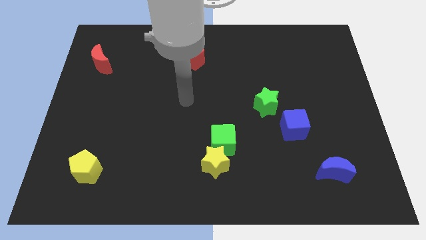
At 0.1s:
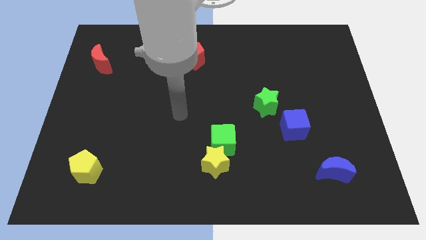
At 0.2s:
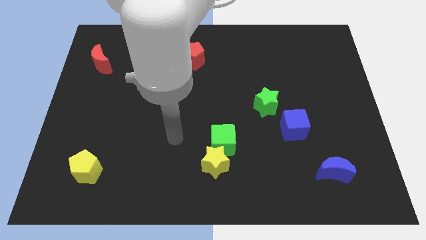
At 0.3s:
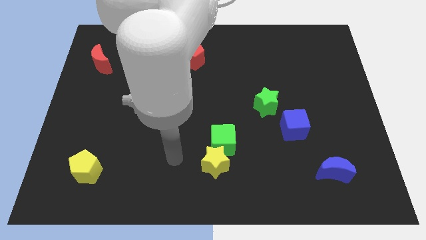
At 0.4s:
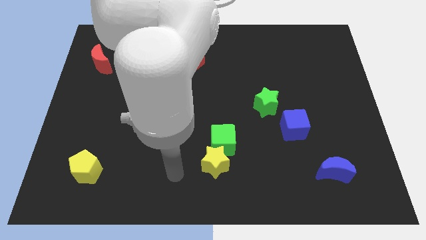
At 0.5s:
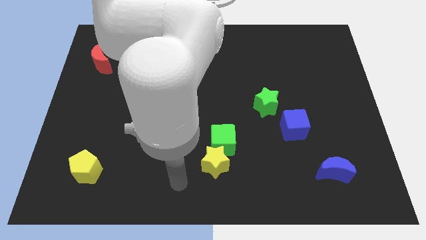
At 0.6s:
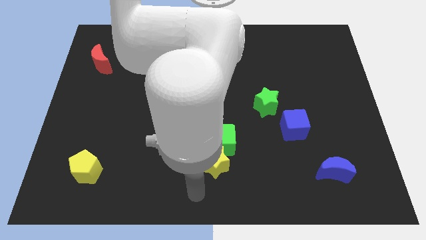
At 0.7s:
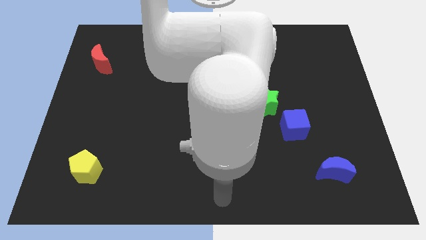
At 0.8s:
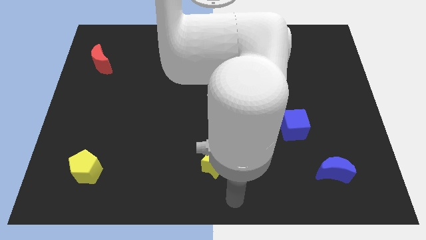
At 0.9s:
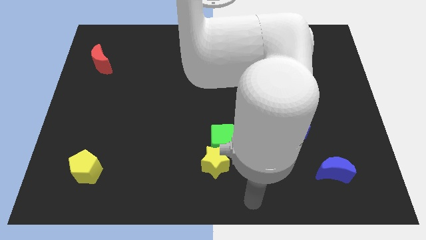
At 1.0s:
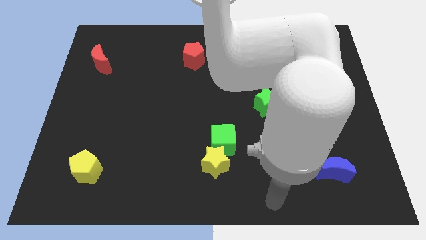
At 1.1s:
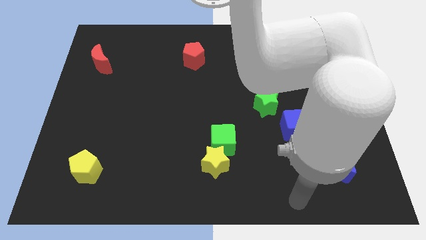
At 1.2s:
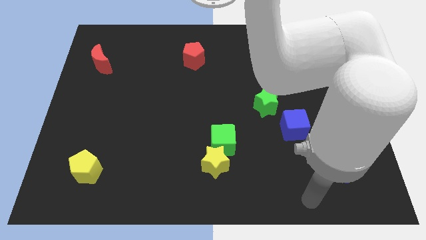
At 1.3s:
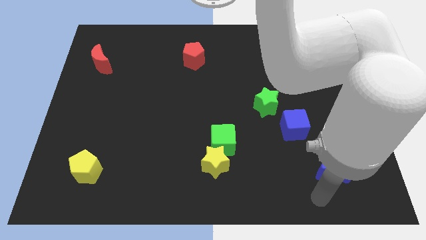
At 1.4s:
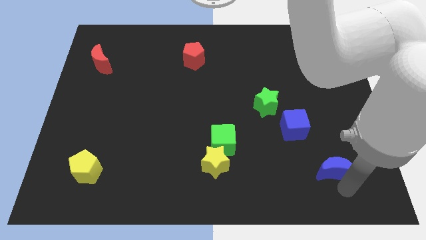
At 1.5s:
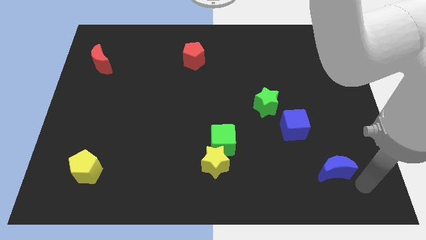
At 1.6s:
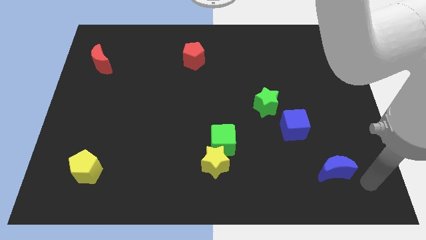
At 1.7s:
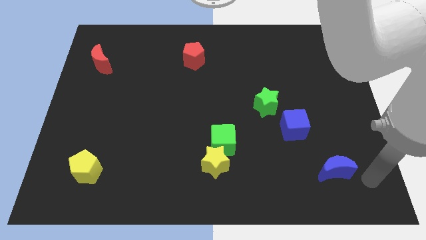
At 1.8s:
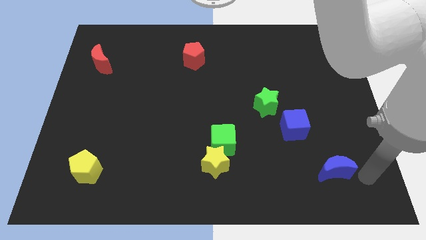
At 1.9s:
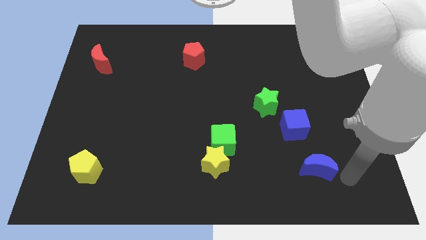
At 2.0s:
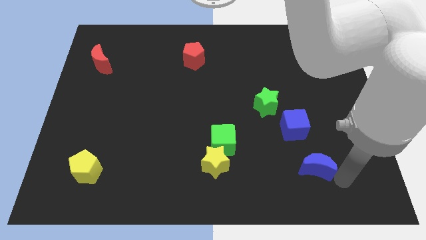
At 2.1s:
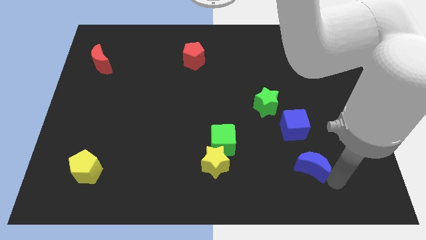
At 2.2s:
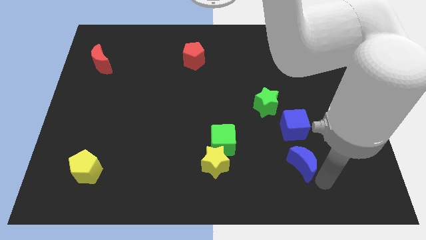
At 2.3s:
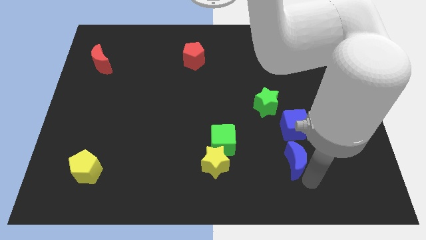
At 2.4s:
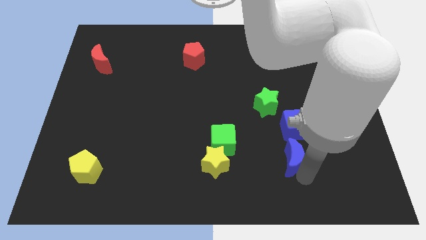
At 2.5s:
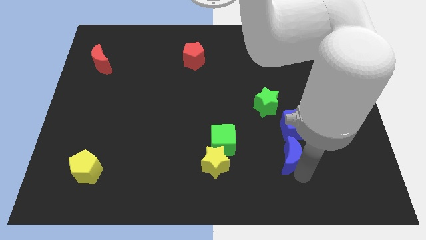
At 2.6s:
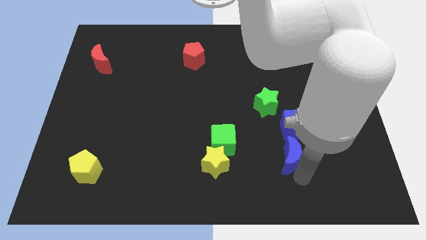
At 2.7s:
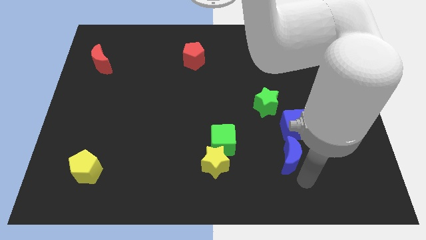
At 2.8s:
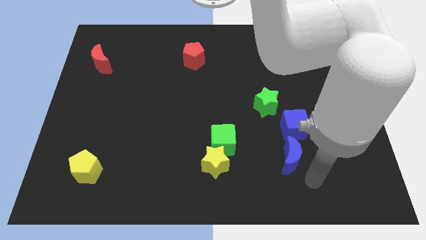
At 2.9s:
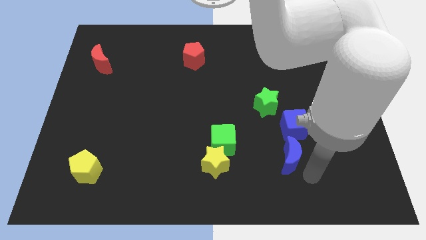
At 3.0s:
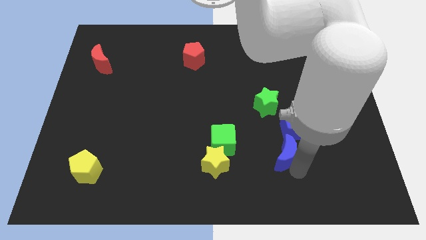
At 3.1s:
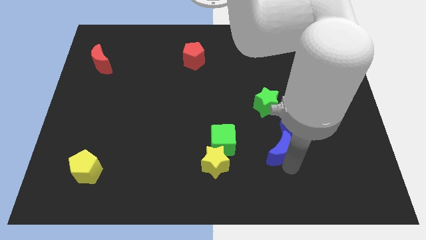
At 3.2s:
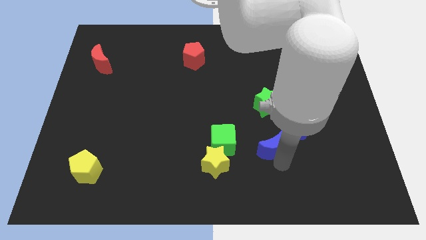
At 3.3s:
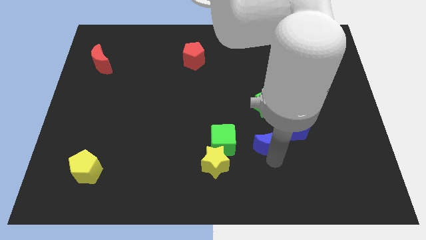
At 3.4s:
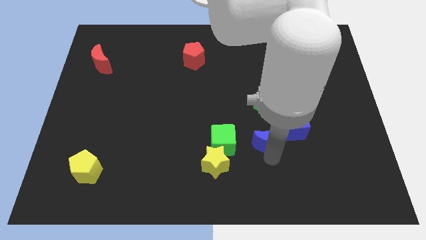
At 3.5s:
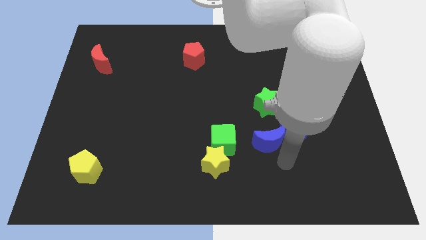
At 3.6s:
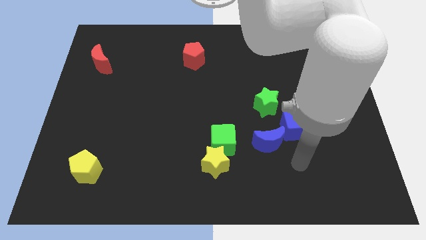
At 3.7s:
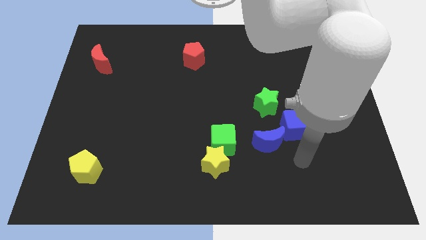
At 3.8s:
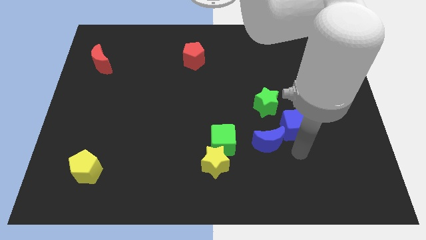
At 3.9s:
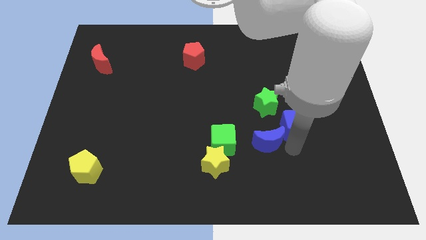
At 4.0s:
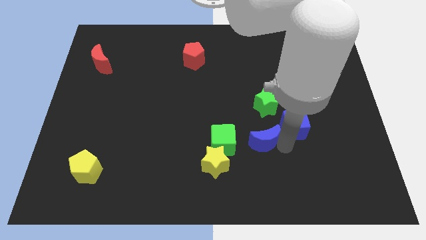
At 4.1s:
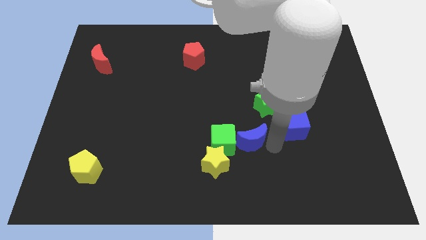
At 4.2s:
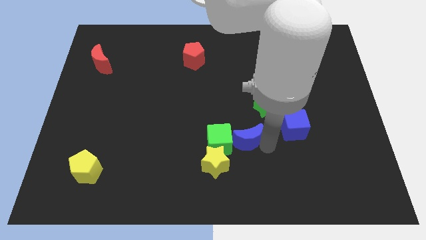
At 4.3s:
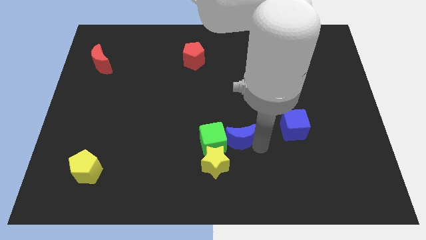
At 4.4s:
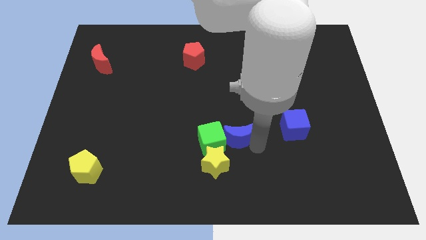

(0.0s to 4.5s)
put the blue moon towards the green cube

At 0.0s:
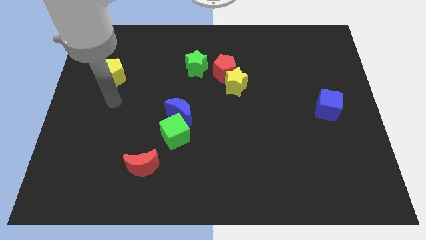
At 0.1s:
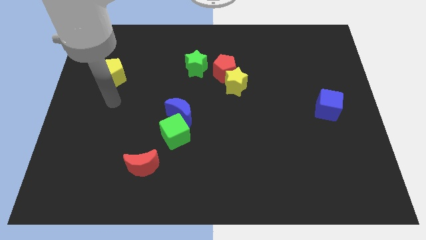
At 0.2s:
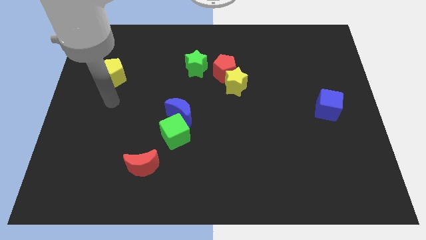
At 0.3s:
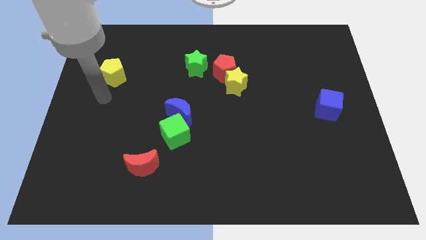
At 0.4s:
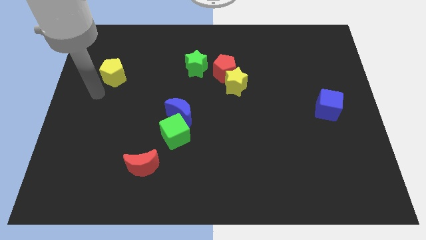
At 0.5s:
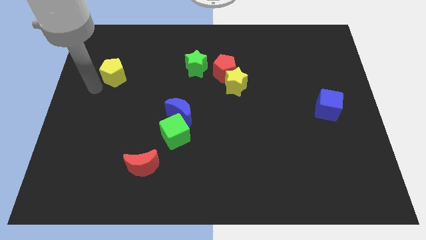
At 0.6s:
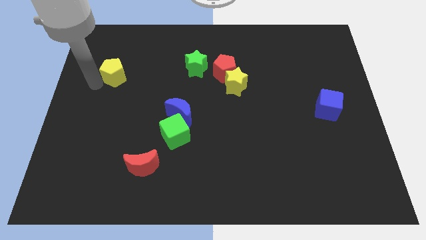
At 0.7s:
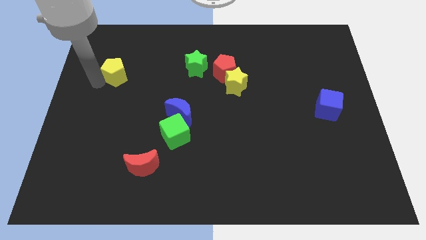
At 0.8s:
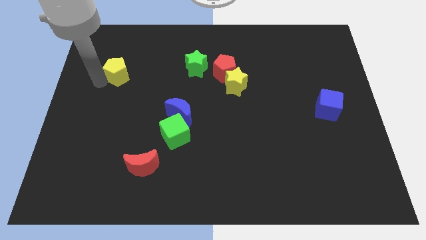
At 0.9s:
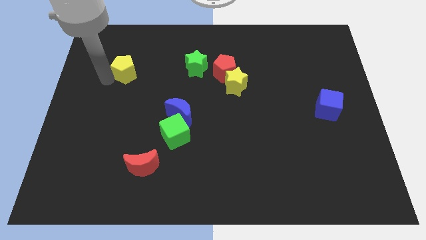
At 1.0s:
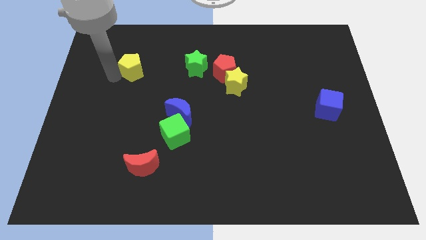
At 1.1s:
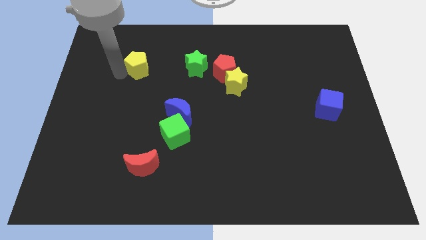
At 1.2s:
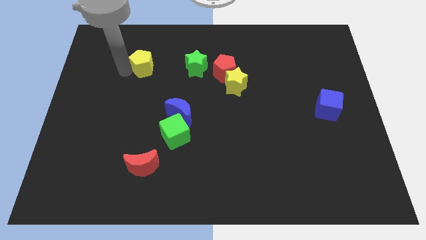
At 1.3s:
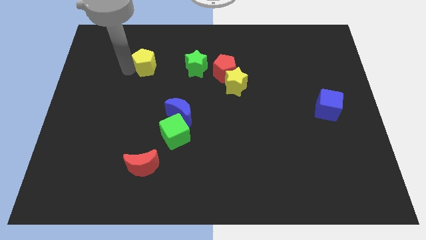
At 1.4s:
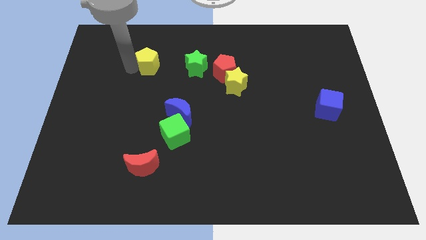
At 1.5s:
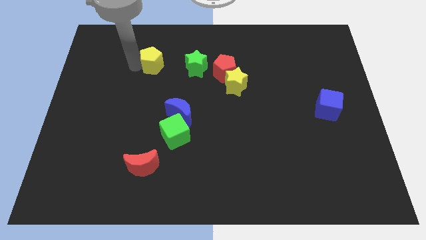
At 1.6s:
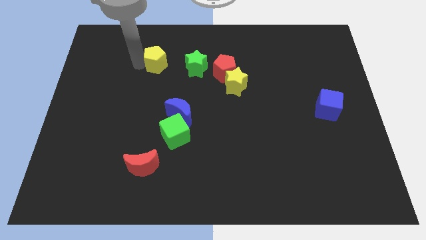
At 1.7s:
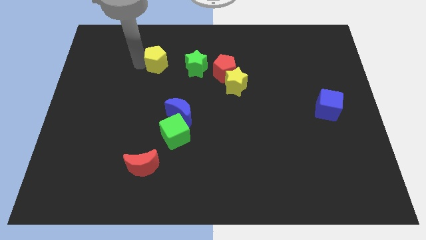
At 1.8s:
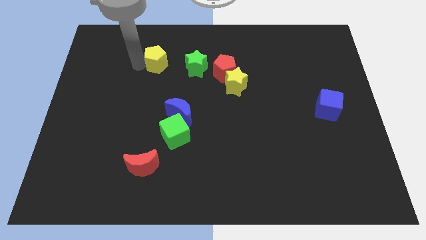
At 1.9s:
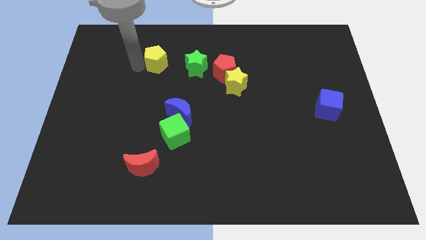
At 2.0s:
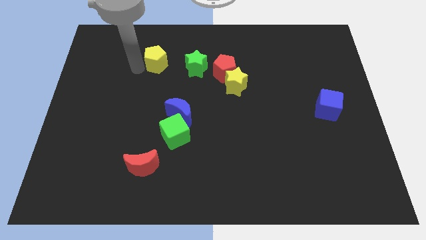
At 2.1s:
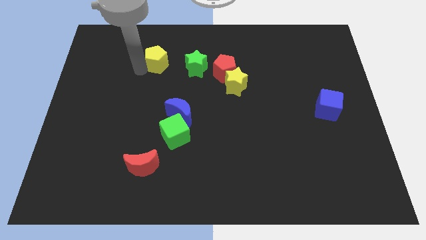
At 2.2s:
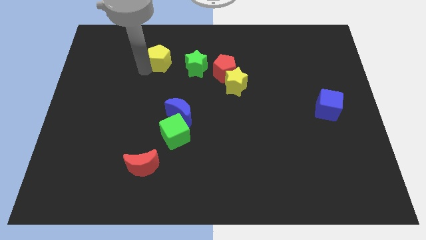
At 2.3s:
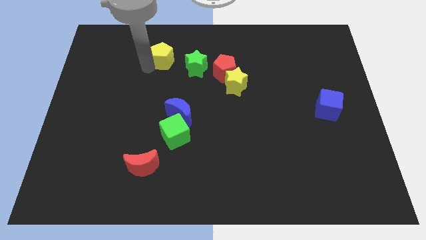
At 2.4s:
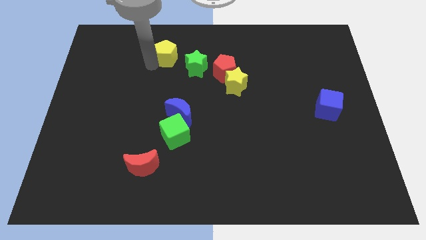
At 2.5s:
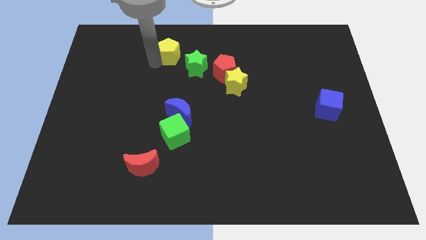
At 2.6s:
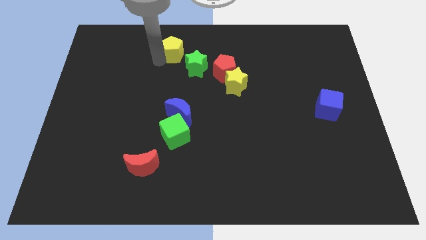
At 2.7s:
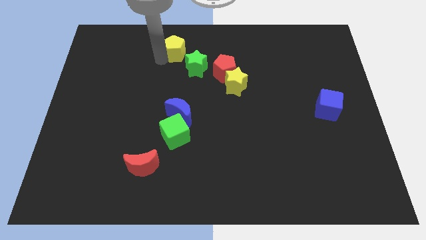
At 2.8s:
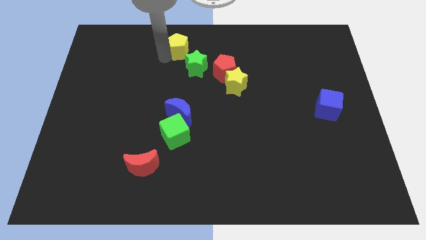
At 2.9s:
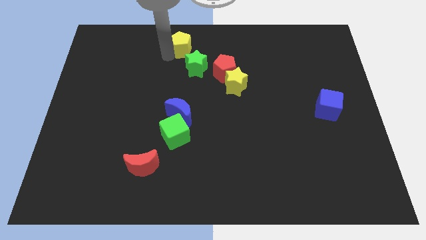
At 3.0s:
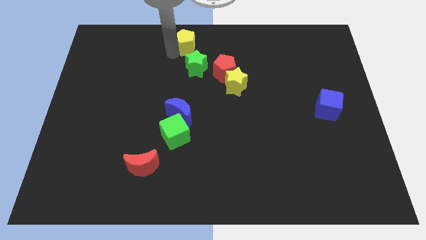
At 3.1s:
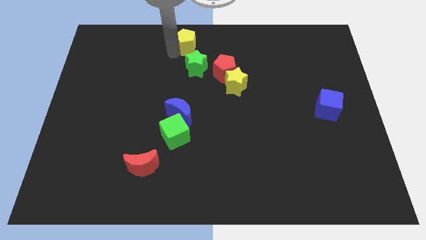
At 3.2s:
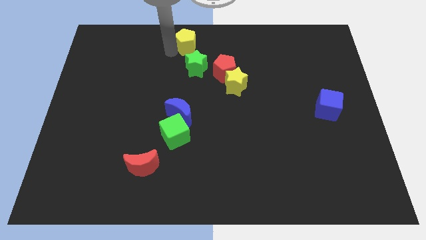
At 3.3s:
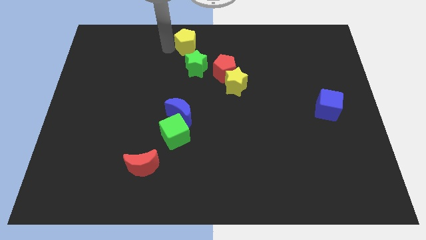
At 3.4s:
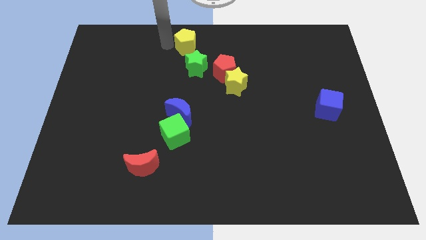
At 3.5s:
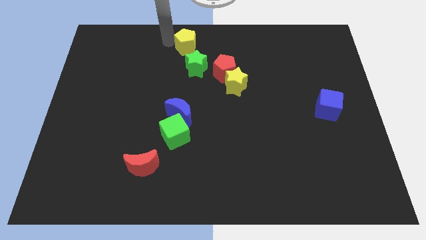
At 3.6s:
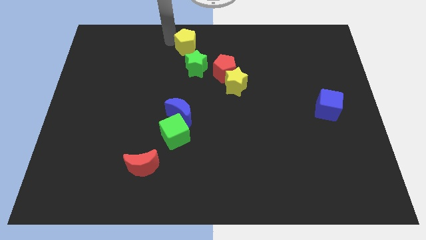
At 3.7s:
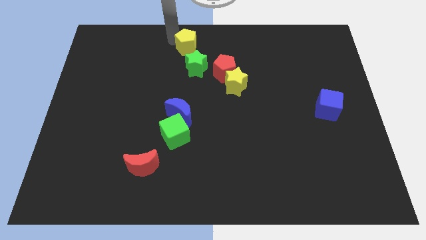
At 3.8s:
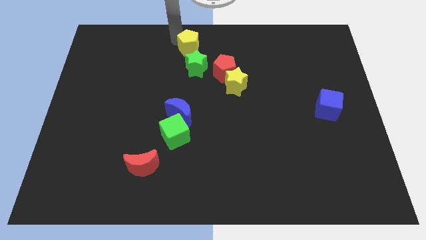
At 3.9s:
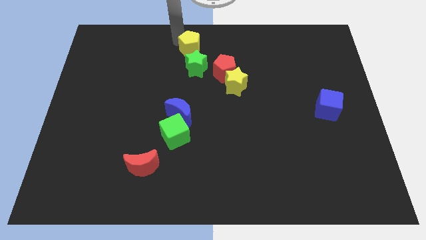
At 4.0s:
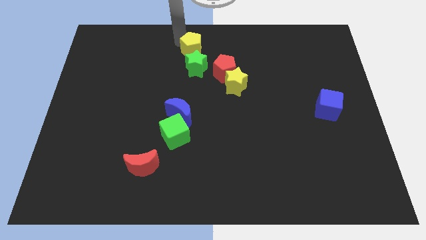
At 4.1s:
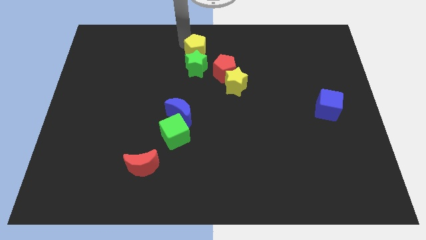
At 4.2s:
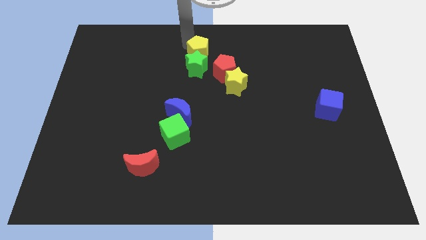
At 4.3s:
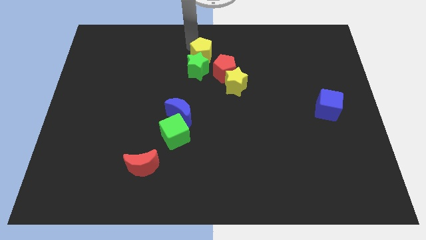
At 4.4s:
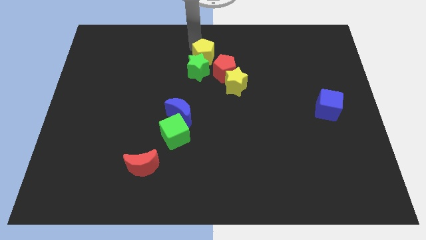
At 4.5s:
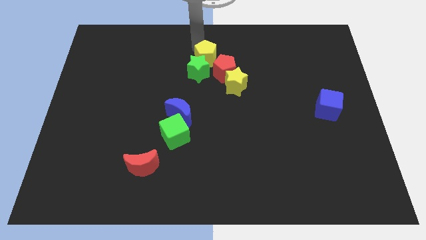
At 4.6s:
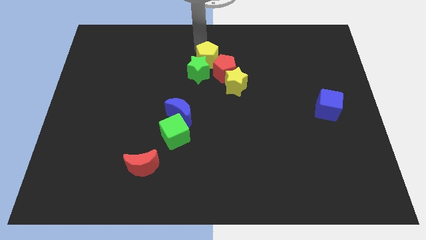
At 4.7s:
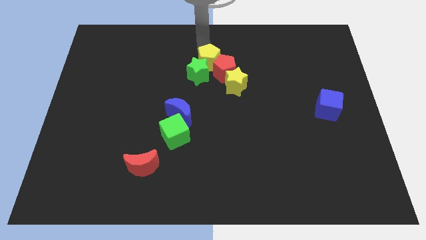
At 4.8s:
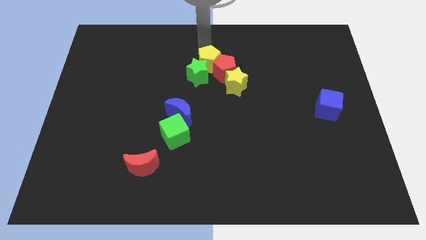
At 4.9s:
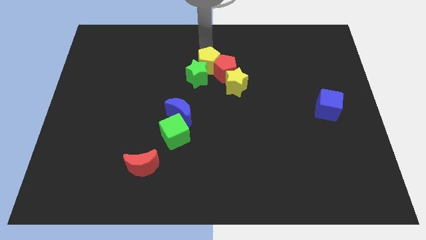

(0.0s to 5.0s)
slide the yellow pentagon close to the red pentagon
